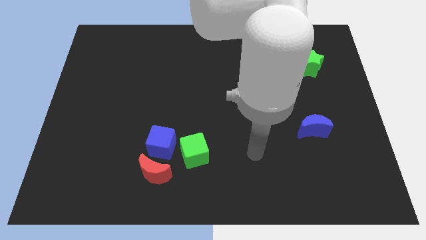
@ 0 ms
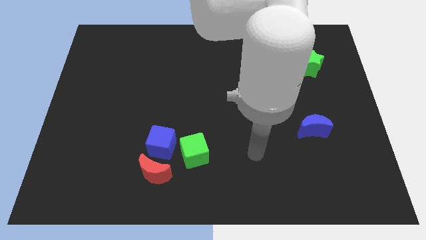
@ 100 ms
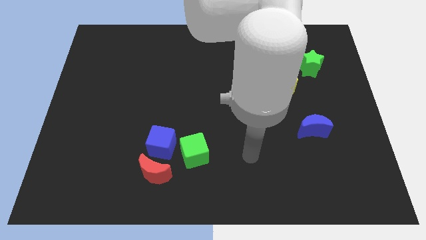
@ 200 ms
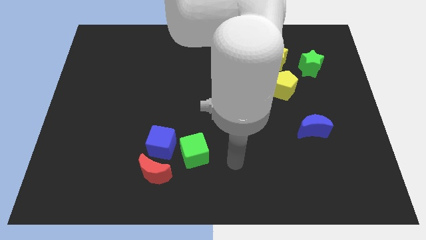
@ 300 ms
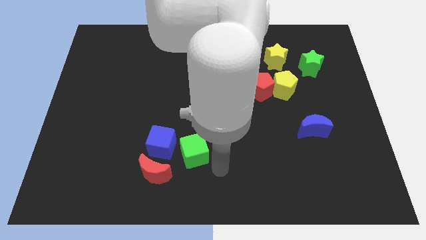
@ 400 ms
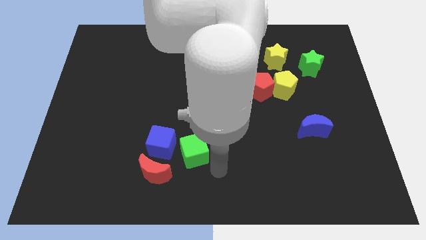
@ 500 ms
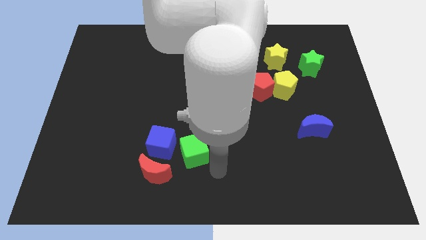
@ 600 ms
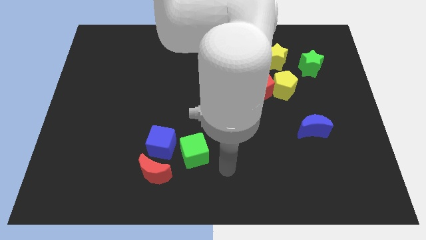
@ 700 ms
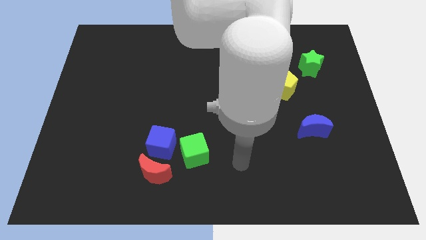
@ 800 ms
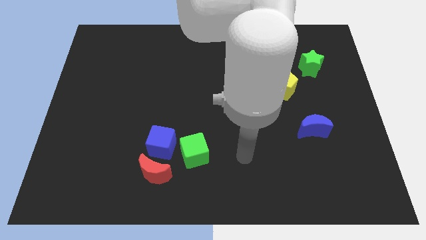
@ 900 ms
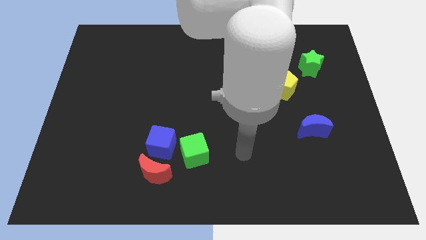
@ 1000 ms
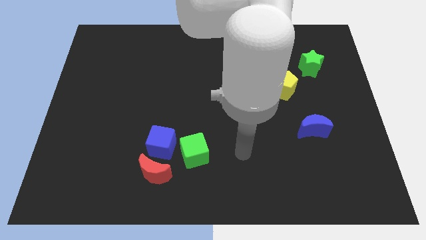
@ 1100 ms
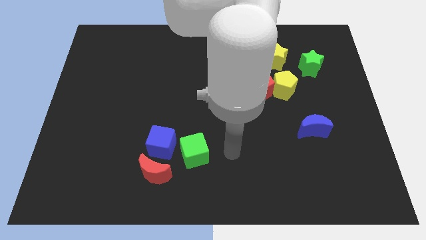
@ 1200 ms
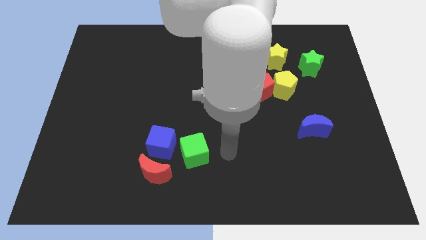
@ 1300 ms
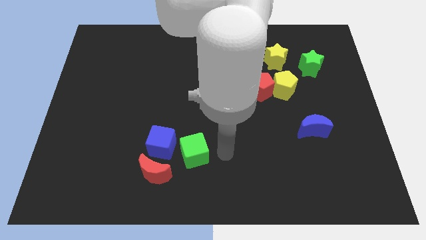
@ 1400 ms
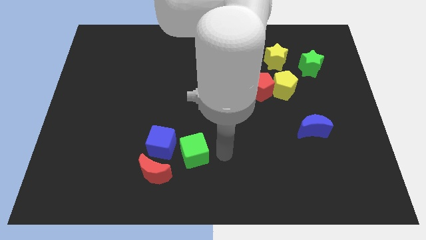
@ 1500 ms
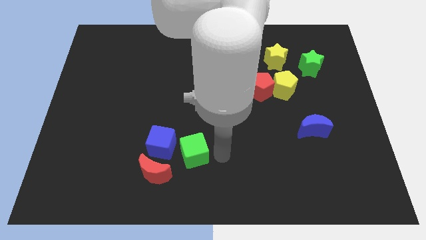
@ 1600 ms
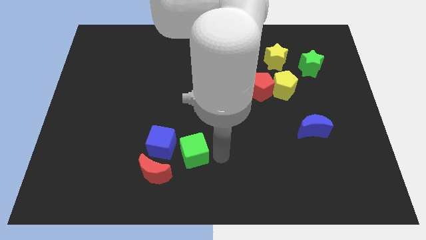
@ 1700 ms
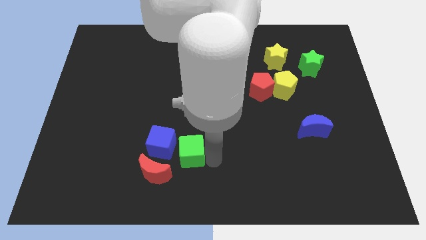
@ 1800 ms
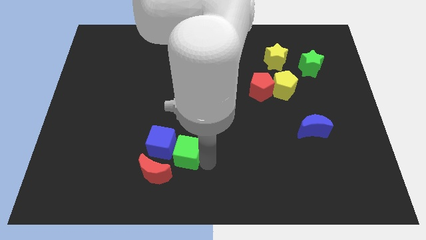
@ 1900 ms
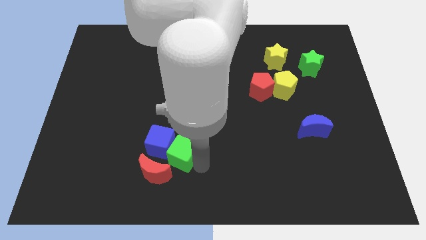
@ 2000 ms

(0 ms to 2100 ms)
move your arm close to green cube

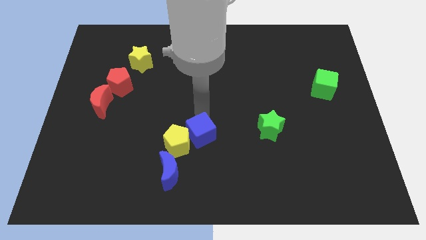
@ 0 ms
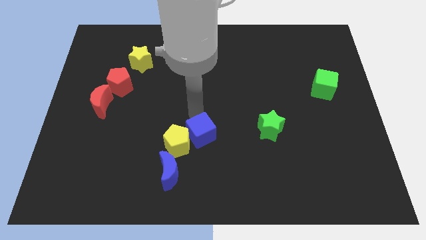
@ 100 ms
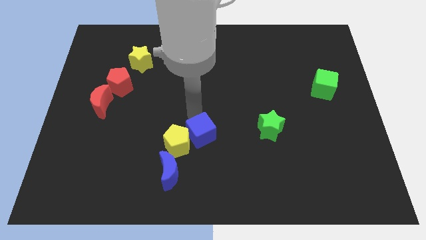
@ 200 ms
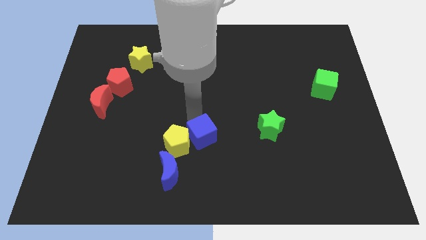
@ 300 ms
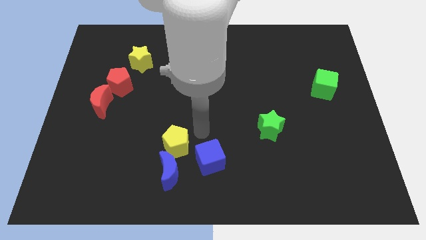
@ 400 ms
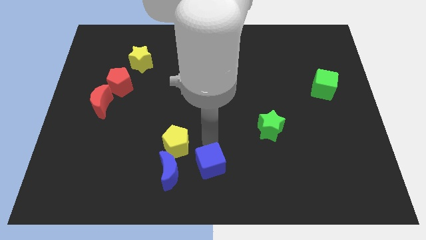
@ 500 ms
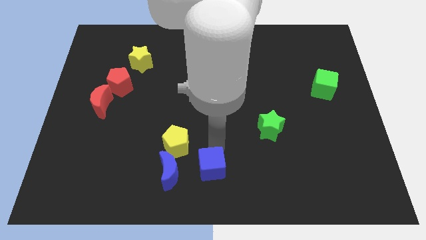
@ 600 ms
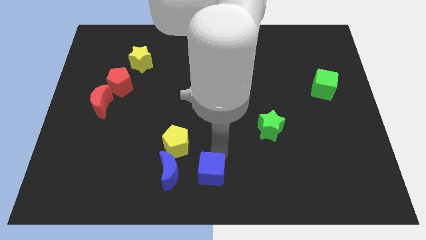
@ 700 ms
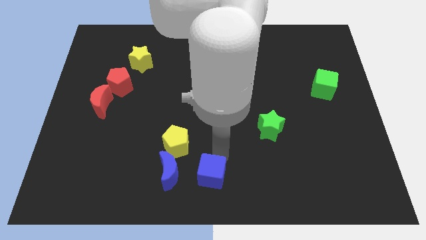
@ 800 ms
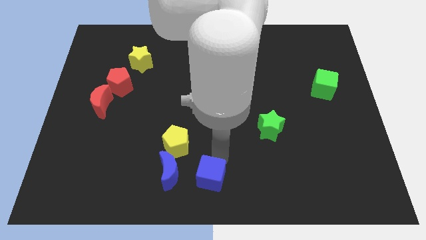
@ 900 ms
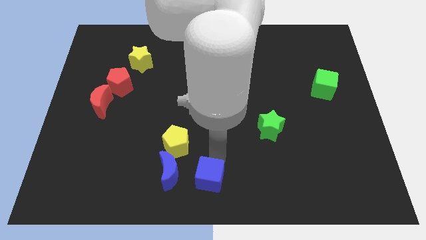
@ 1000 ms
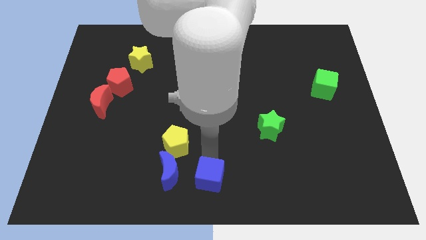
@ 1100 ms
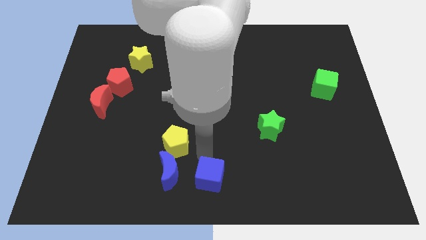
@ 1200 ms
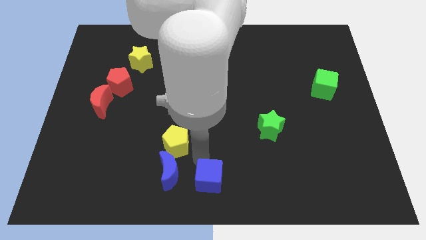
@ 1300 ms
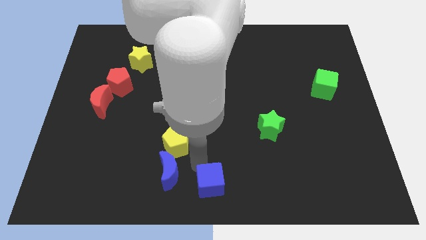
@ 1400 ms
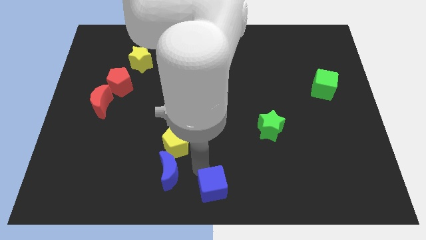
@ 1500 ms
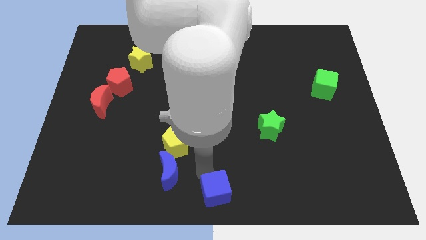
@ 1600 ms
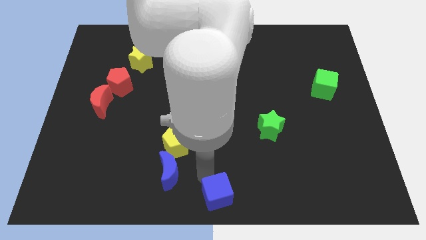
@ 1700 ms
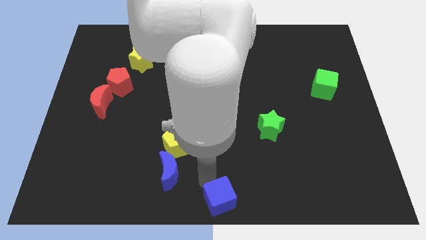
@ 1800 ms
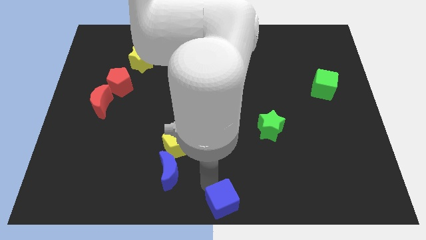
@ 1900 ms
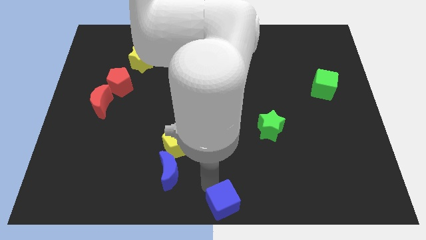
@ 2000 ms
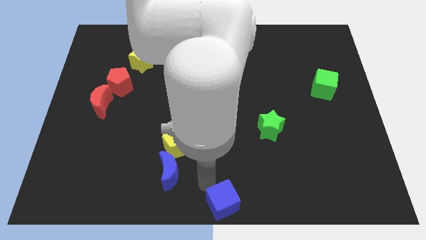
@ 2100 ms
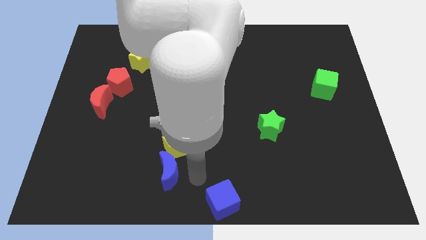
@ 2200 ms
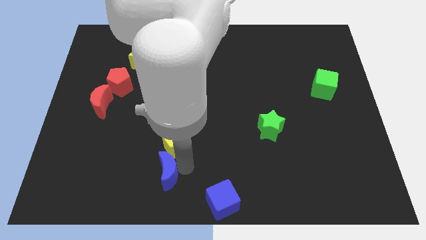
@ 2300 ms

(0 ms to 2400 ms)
move blue cube to the bottom center

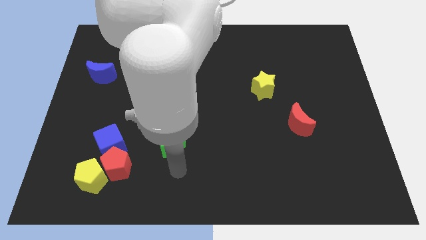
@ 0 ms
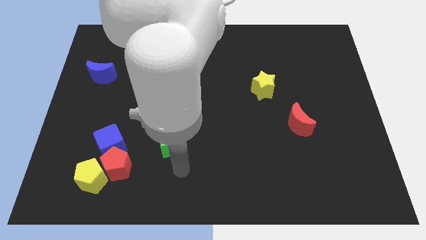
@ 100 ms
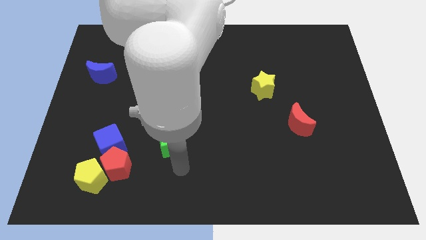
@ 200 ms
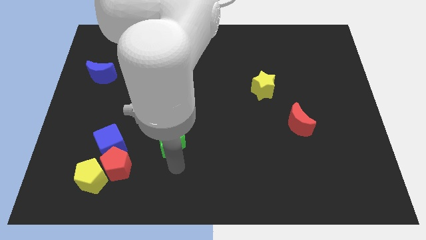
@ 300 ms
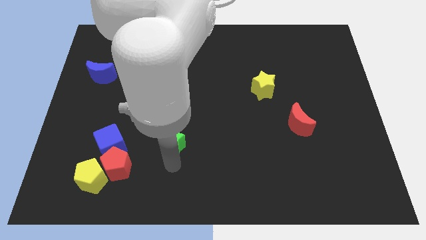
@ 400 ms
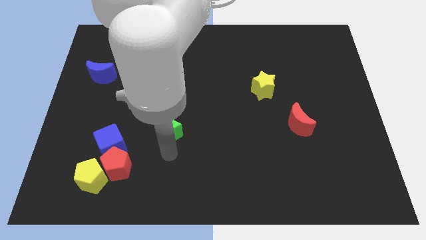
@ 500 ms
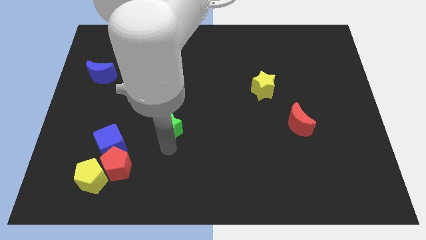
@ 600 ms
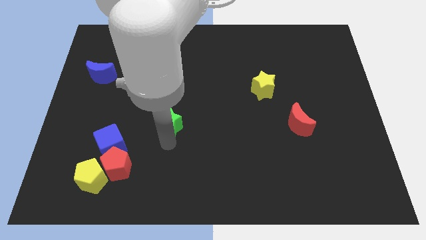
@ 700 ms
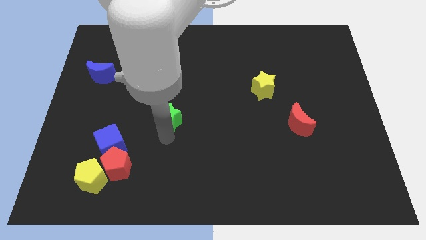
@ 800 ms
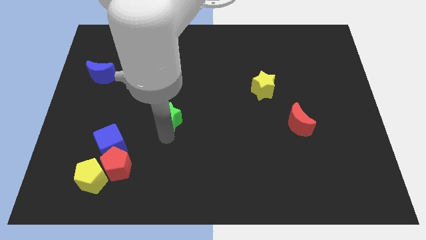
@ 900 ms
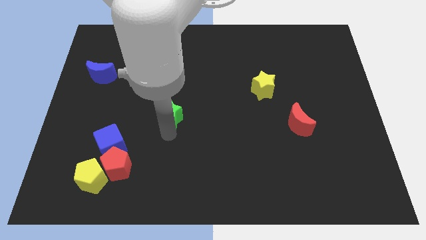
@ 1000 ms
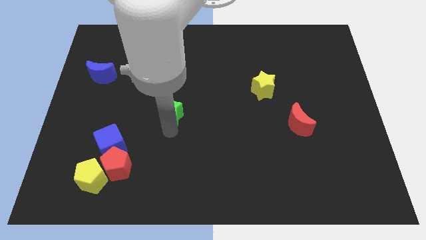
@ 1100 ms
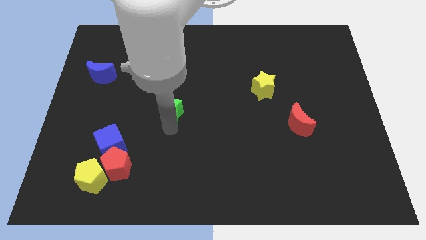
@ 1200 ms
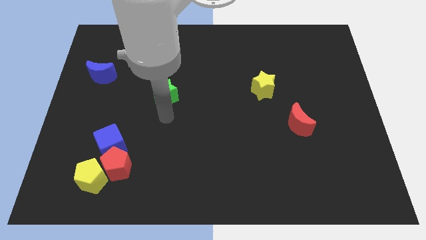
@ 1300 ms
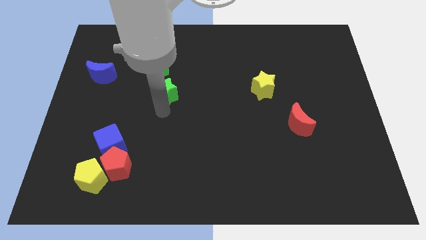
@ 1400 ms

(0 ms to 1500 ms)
push green star towards green cube

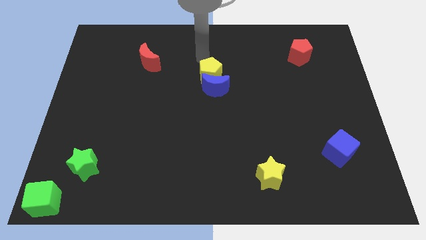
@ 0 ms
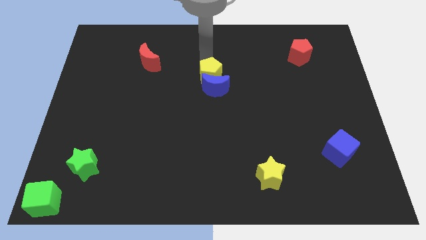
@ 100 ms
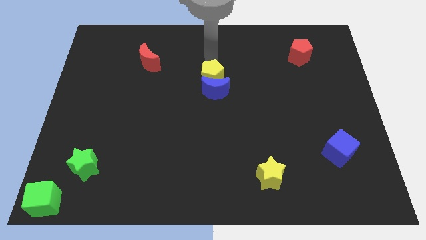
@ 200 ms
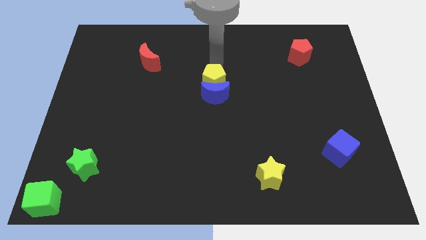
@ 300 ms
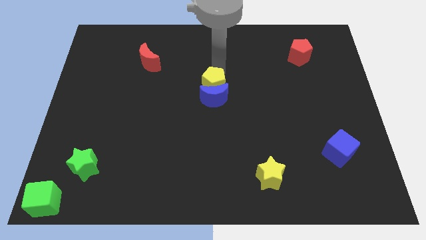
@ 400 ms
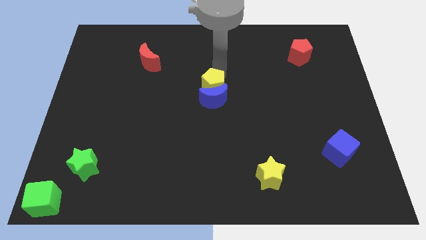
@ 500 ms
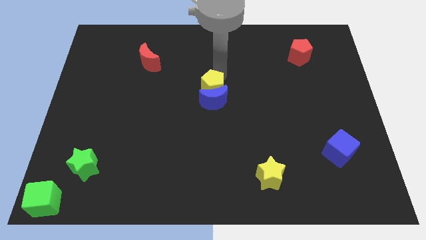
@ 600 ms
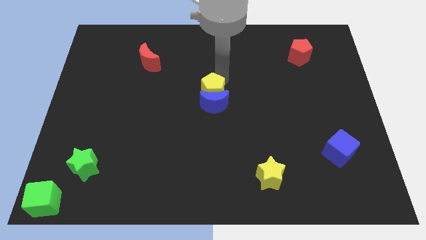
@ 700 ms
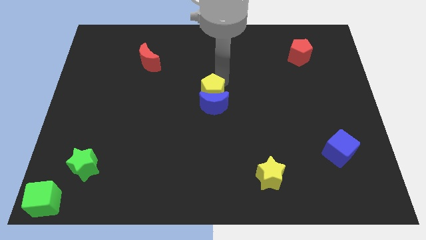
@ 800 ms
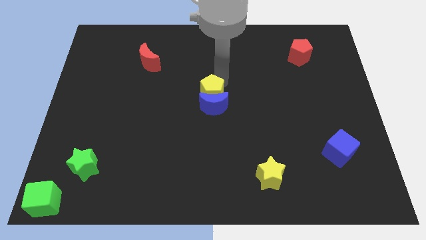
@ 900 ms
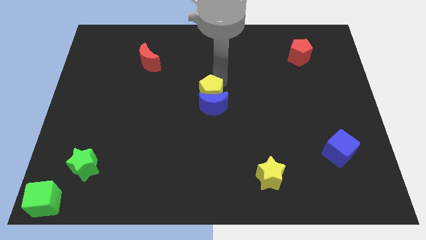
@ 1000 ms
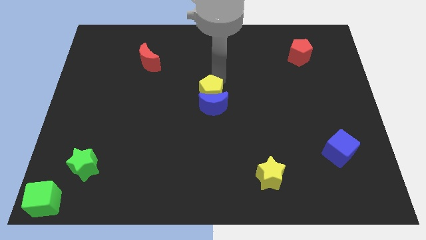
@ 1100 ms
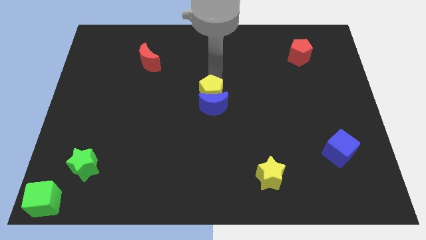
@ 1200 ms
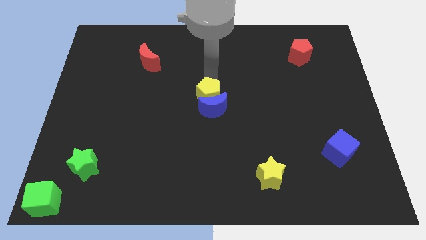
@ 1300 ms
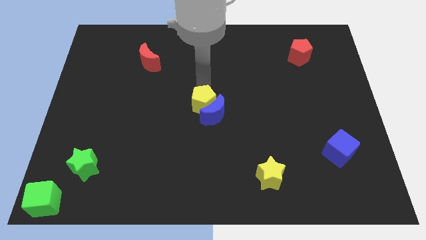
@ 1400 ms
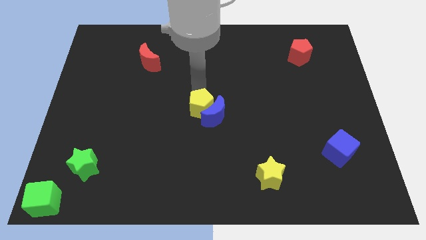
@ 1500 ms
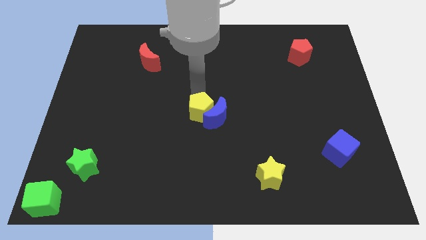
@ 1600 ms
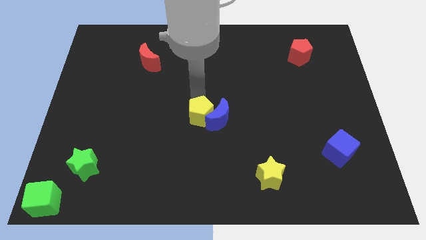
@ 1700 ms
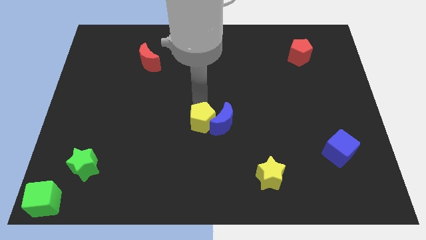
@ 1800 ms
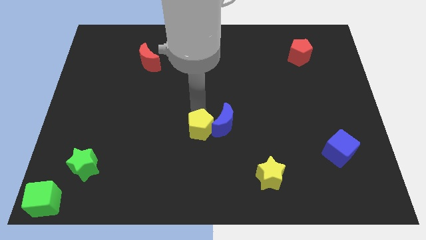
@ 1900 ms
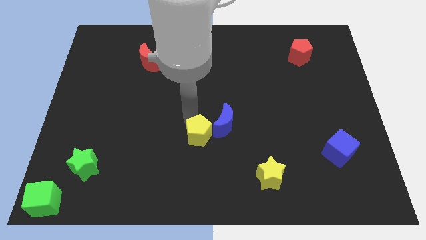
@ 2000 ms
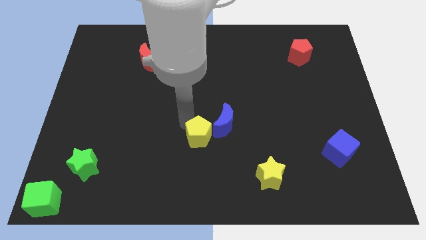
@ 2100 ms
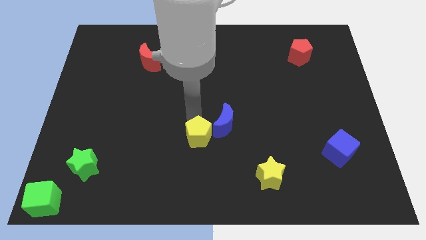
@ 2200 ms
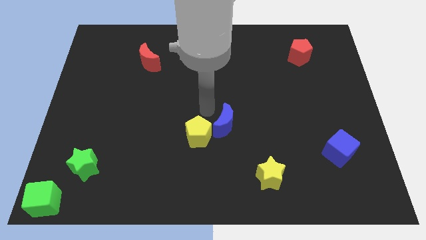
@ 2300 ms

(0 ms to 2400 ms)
push yellow pentagon along with blue crescent to the center

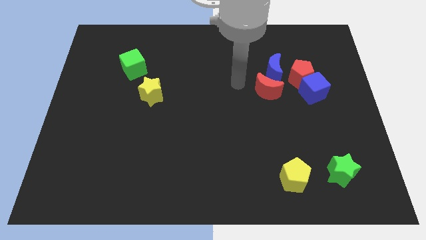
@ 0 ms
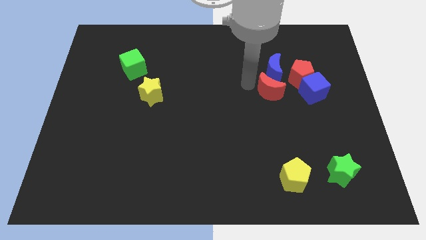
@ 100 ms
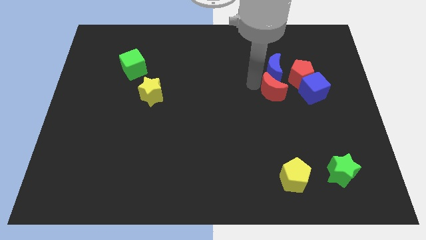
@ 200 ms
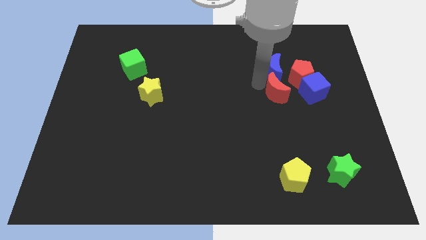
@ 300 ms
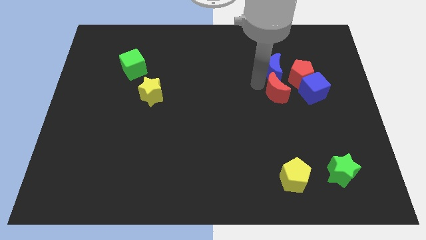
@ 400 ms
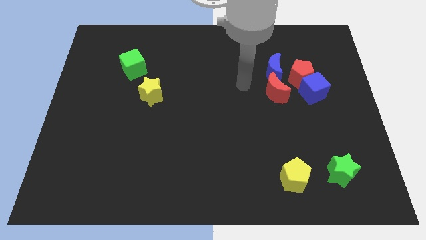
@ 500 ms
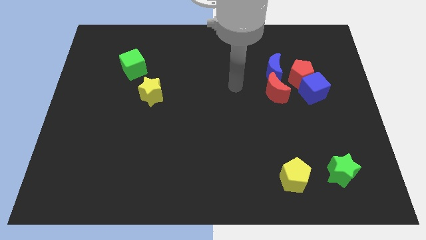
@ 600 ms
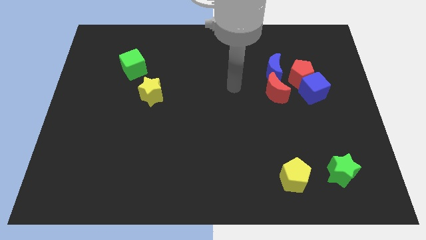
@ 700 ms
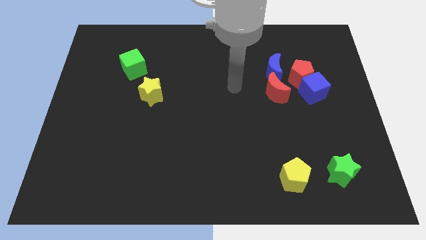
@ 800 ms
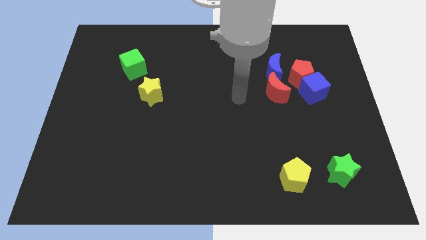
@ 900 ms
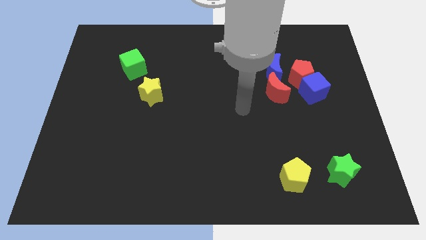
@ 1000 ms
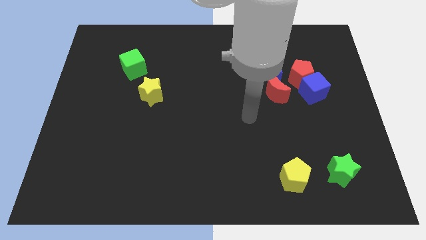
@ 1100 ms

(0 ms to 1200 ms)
place the red moon in a slightly to the right
